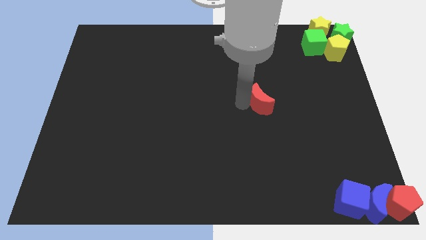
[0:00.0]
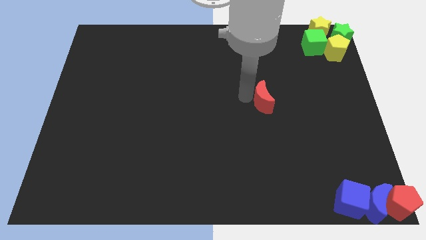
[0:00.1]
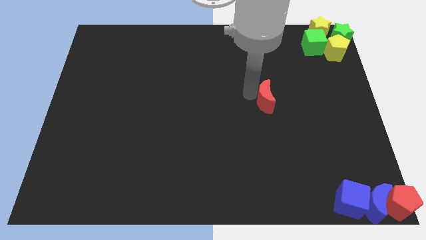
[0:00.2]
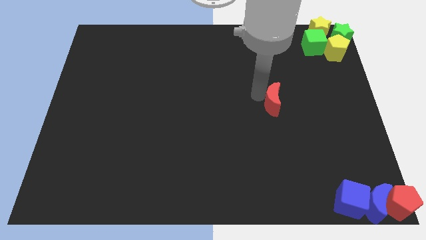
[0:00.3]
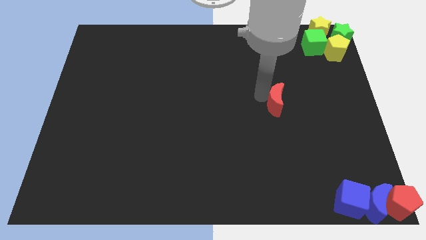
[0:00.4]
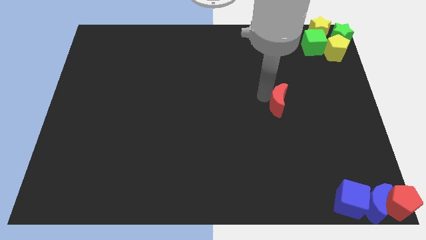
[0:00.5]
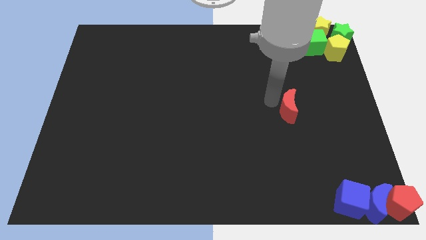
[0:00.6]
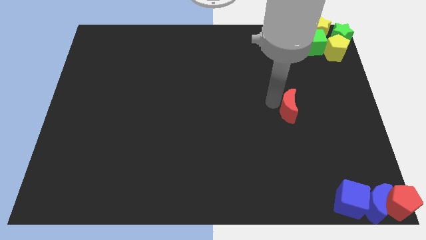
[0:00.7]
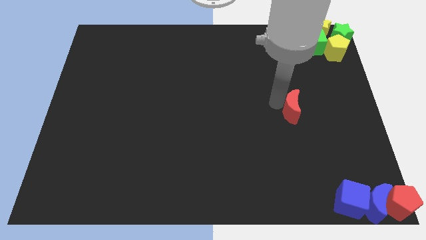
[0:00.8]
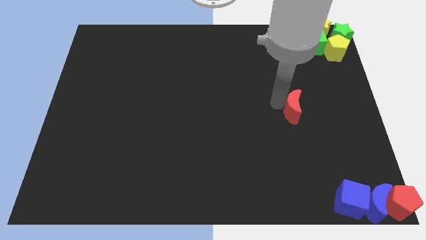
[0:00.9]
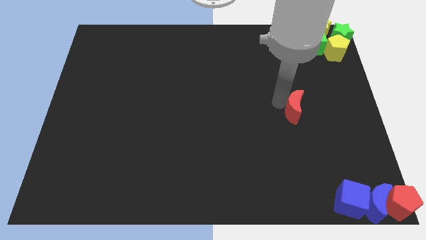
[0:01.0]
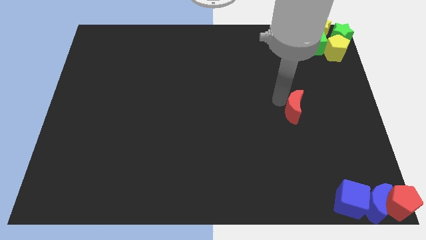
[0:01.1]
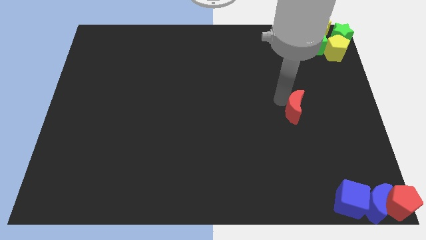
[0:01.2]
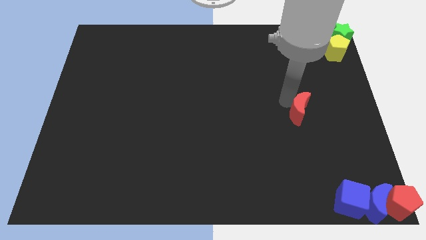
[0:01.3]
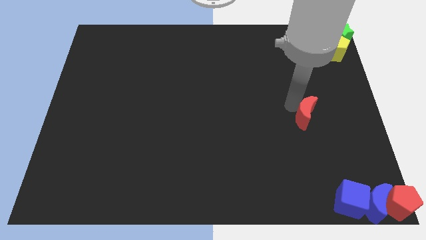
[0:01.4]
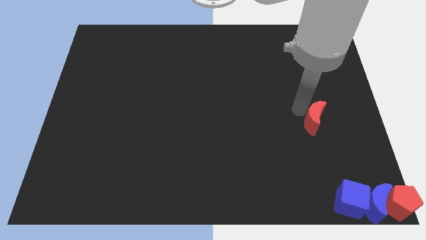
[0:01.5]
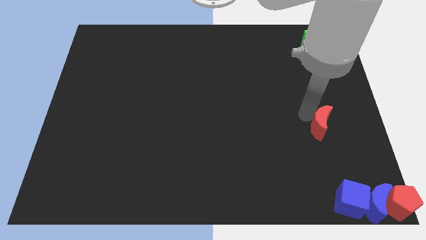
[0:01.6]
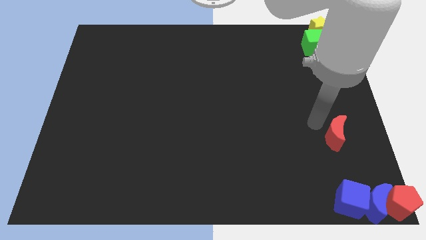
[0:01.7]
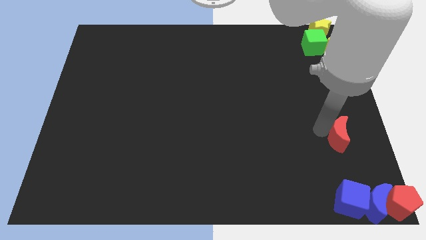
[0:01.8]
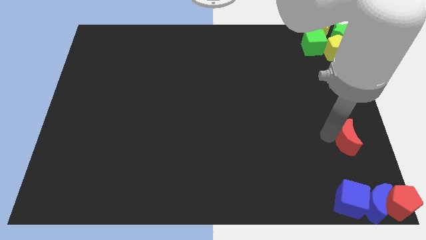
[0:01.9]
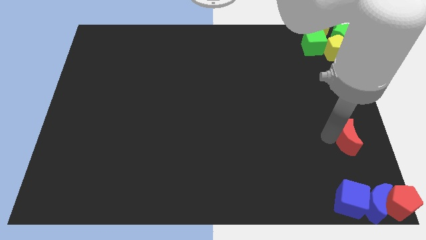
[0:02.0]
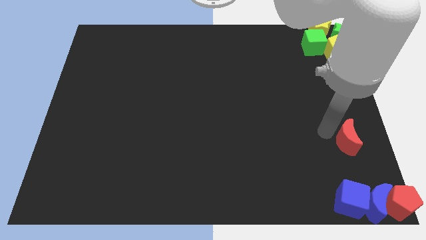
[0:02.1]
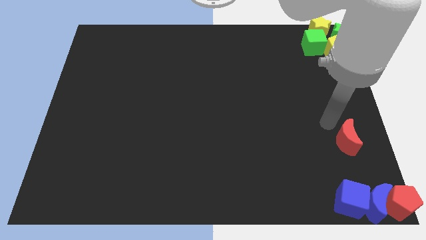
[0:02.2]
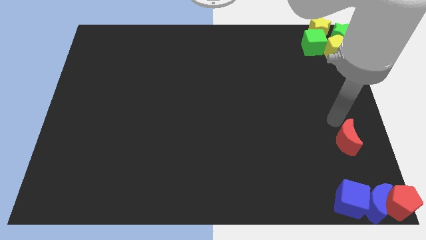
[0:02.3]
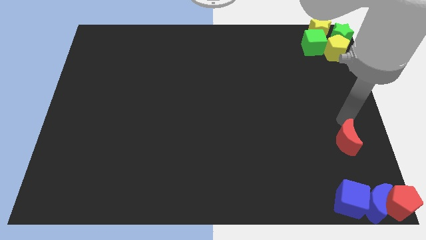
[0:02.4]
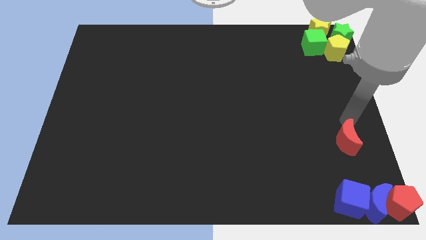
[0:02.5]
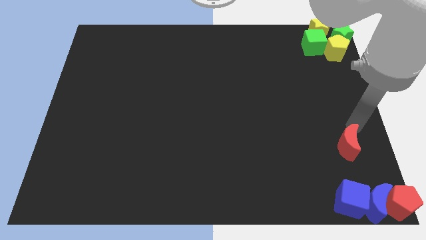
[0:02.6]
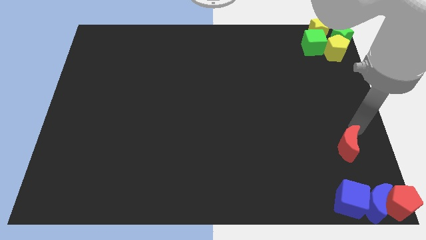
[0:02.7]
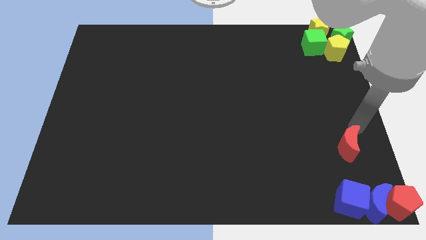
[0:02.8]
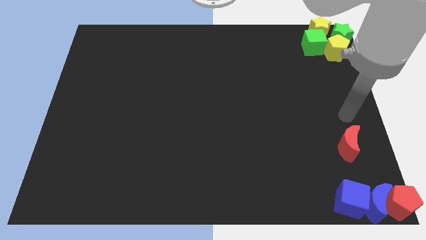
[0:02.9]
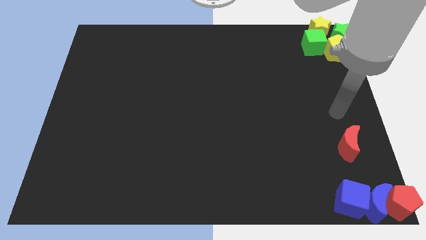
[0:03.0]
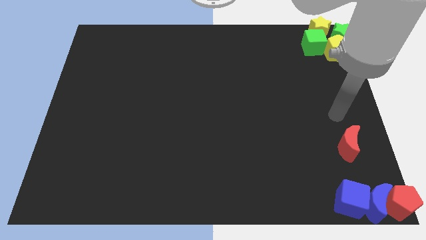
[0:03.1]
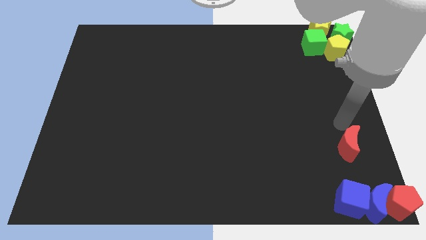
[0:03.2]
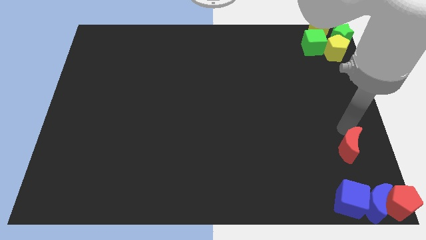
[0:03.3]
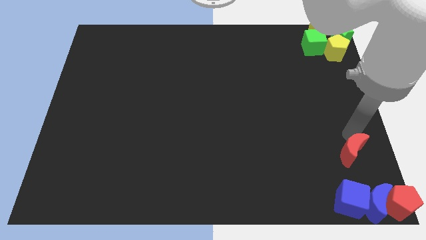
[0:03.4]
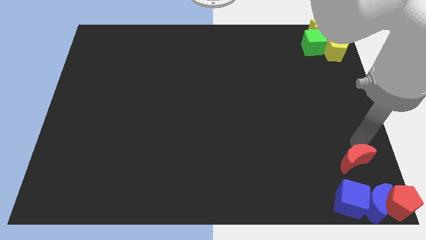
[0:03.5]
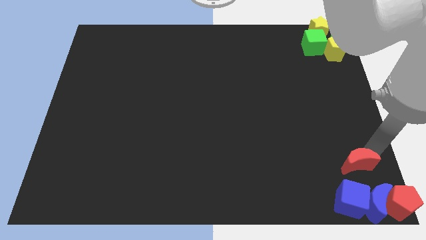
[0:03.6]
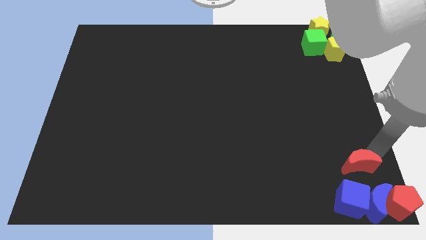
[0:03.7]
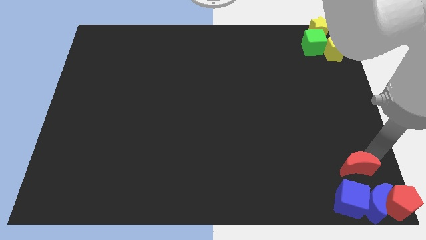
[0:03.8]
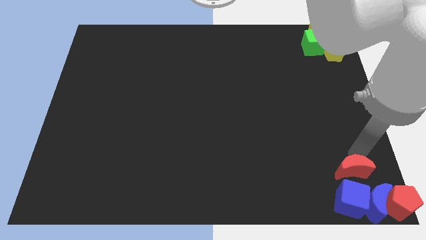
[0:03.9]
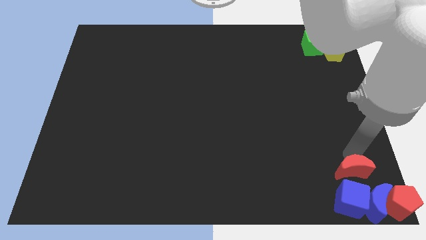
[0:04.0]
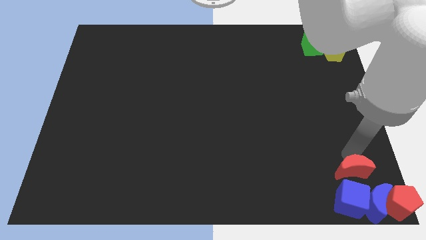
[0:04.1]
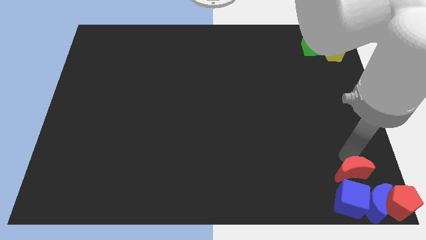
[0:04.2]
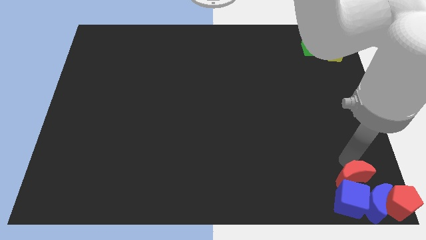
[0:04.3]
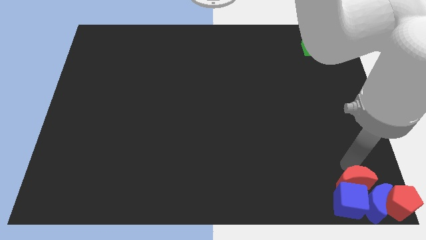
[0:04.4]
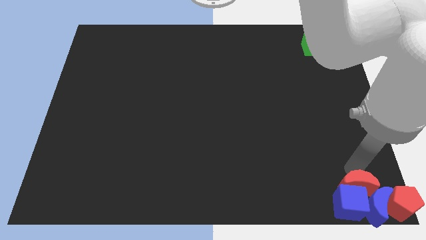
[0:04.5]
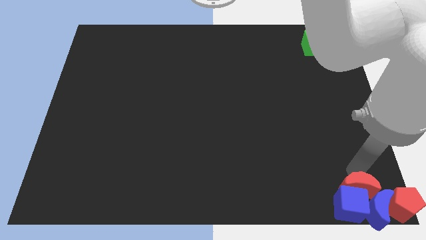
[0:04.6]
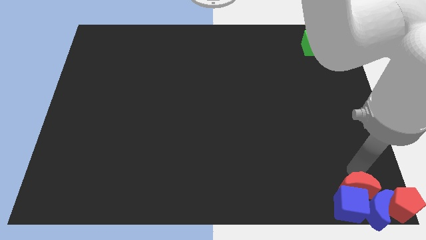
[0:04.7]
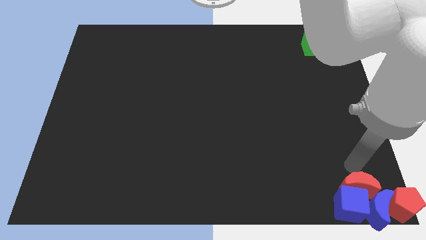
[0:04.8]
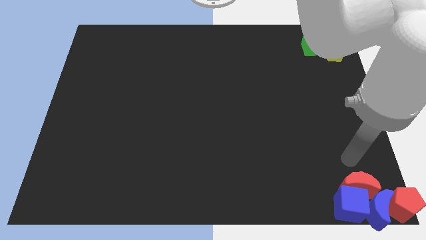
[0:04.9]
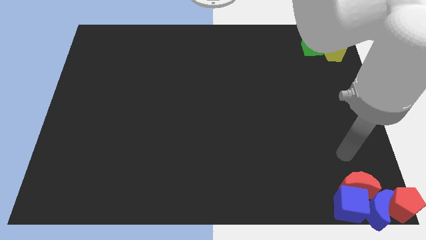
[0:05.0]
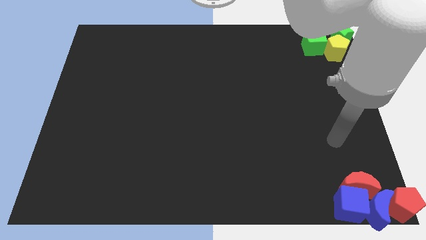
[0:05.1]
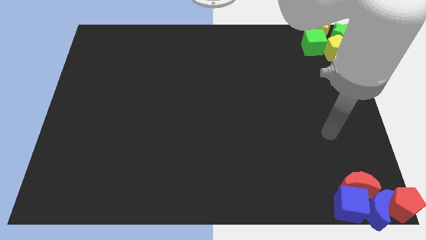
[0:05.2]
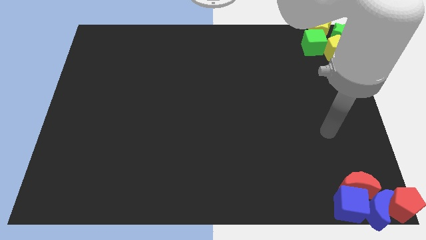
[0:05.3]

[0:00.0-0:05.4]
push the red crescent to the bottom right corner of the board

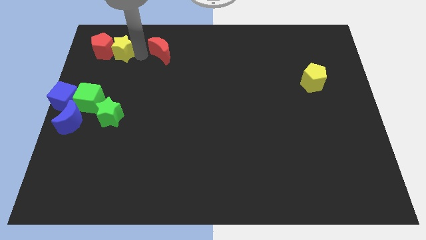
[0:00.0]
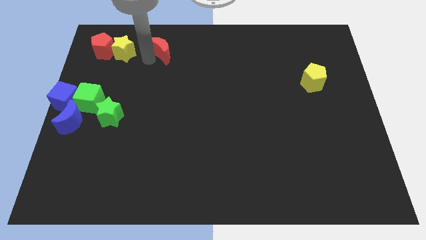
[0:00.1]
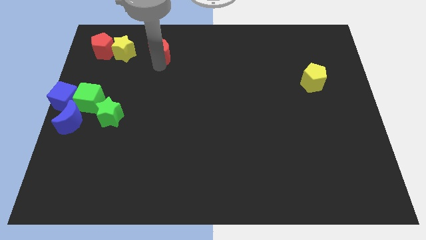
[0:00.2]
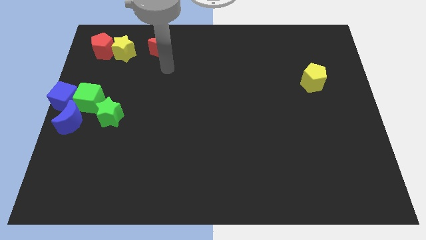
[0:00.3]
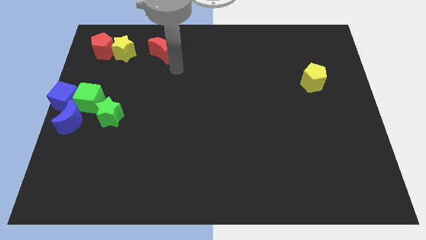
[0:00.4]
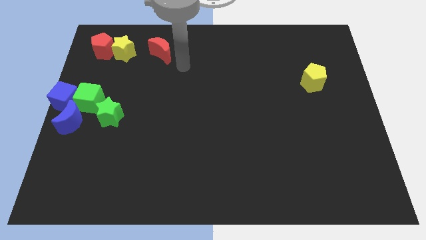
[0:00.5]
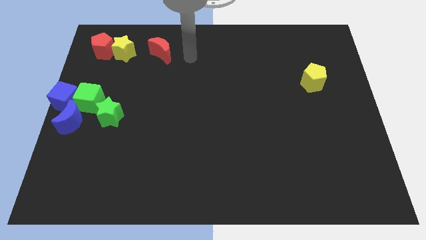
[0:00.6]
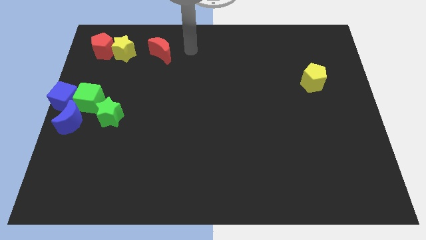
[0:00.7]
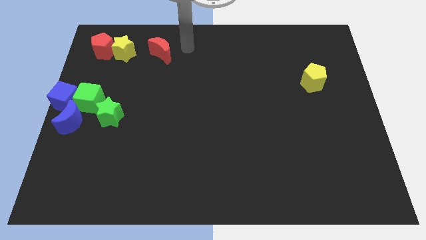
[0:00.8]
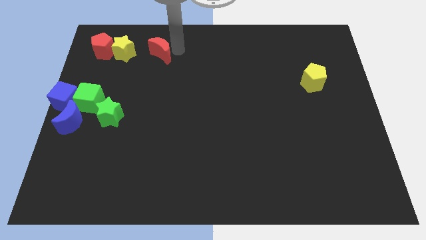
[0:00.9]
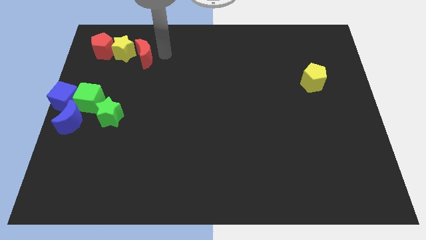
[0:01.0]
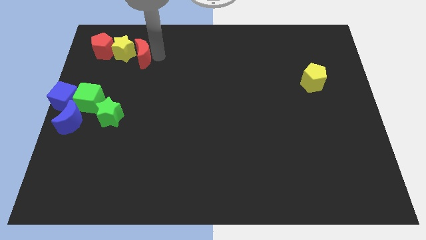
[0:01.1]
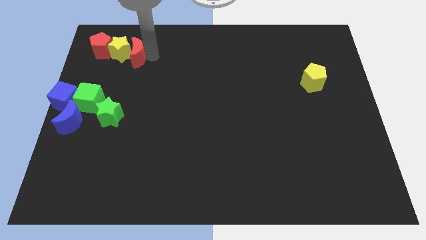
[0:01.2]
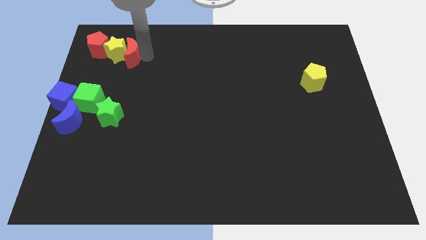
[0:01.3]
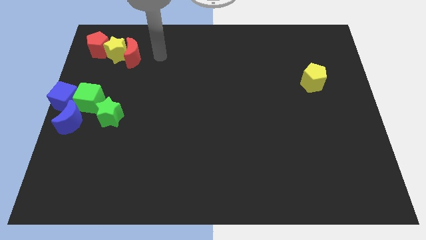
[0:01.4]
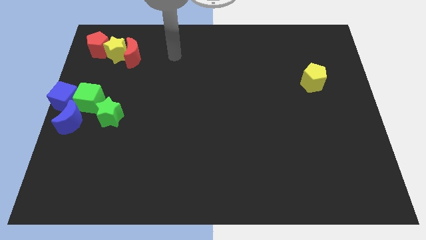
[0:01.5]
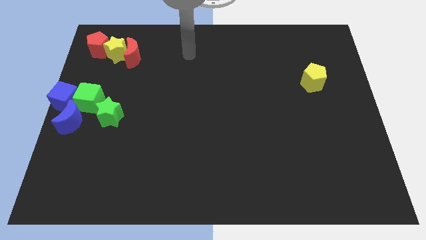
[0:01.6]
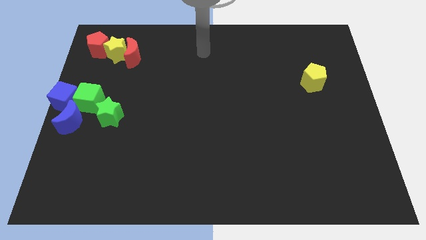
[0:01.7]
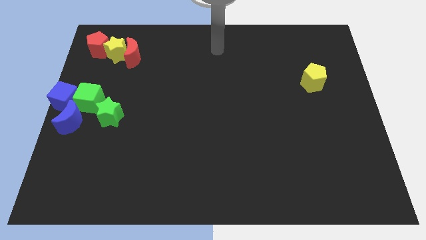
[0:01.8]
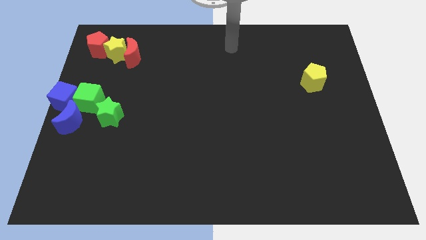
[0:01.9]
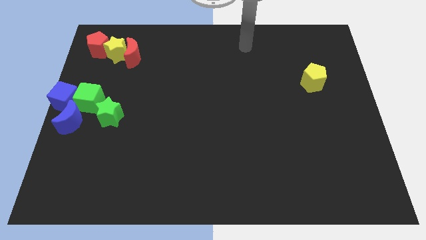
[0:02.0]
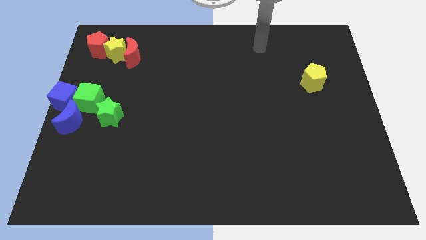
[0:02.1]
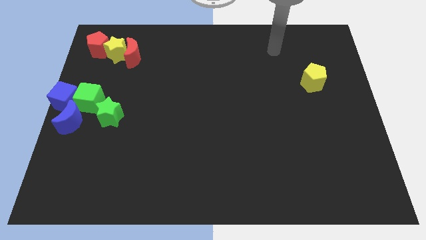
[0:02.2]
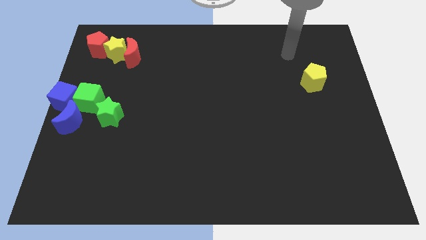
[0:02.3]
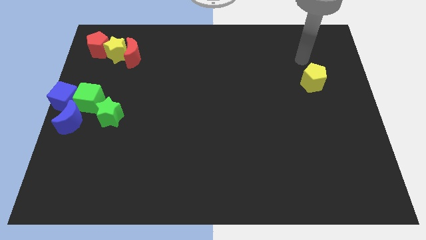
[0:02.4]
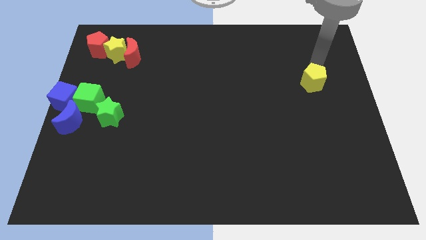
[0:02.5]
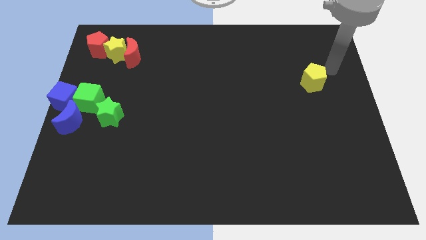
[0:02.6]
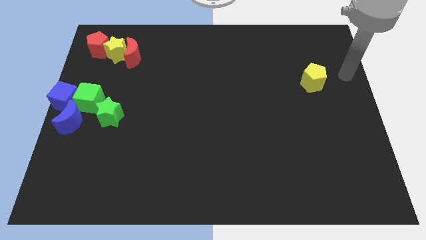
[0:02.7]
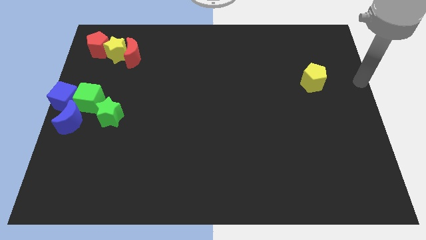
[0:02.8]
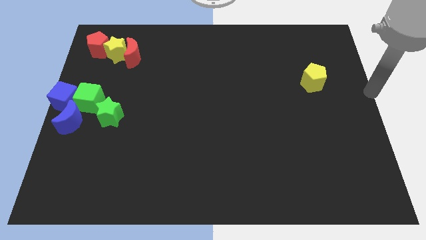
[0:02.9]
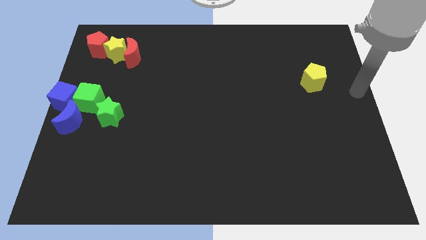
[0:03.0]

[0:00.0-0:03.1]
push the red moon into the yellow star

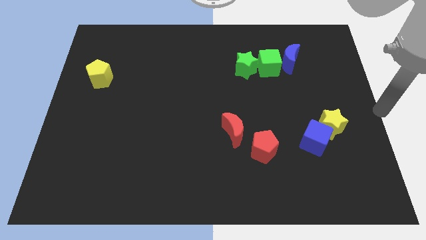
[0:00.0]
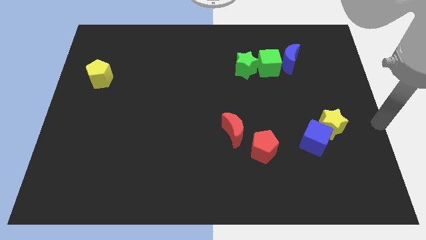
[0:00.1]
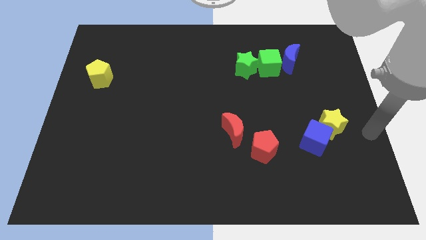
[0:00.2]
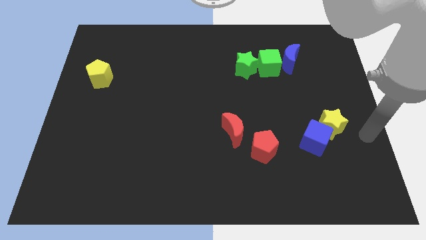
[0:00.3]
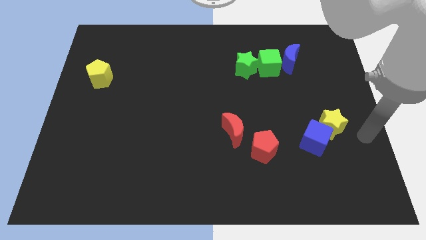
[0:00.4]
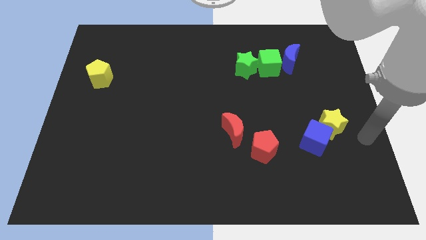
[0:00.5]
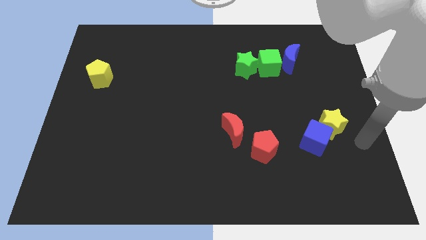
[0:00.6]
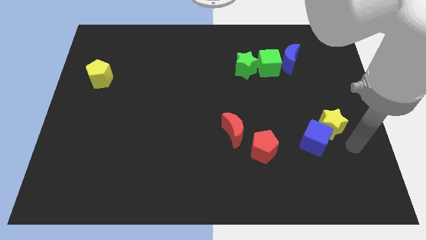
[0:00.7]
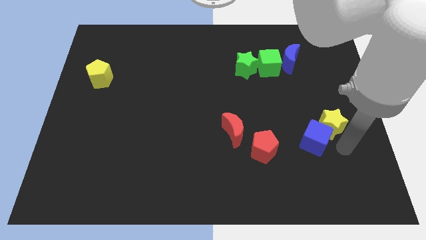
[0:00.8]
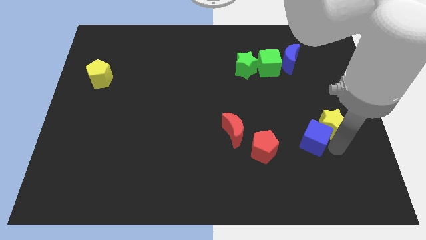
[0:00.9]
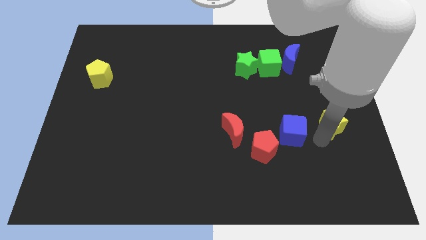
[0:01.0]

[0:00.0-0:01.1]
move blue cube slightly up
